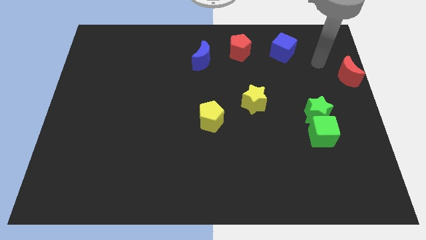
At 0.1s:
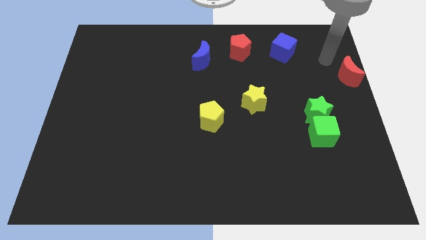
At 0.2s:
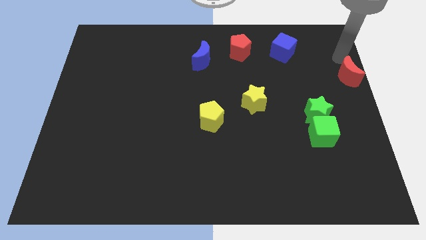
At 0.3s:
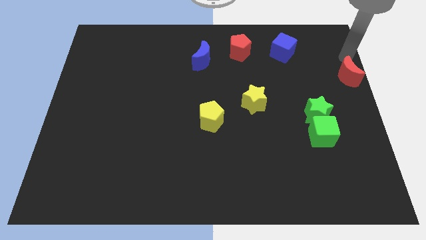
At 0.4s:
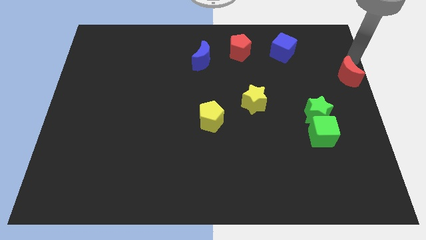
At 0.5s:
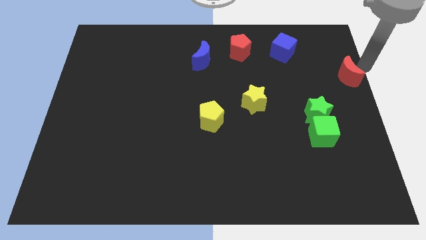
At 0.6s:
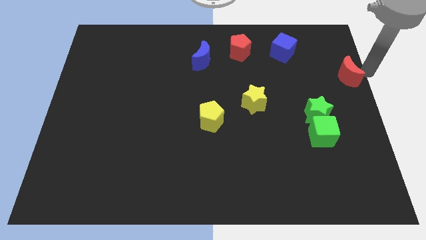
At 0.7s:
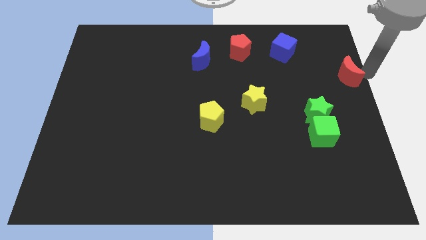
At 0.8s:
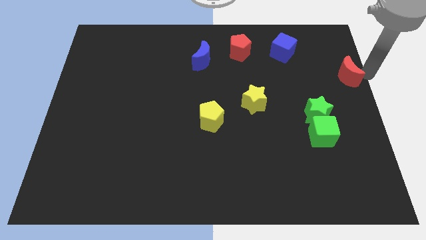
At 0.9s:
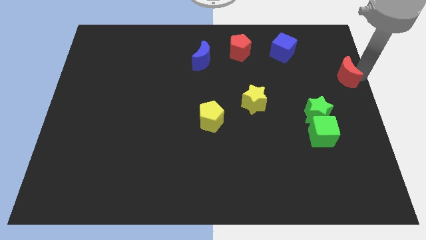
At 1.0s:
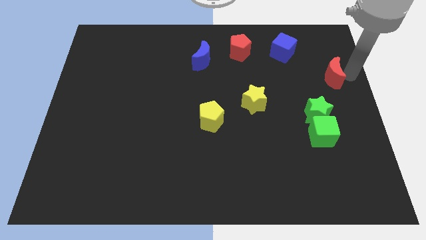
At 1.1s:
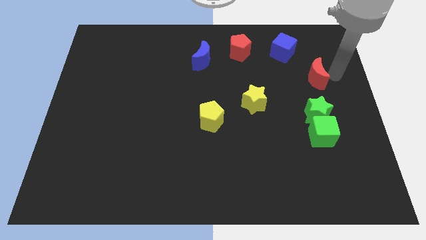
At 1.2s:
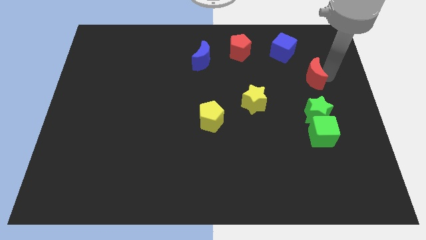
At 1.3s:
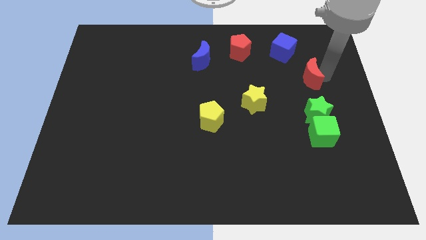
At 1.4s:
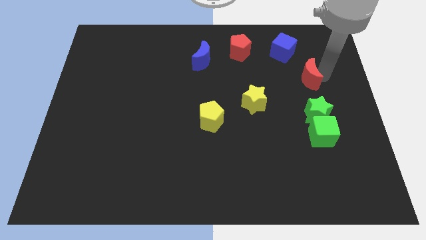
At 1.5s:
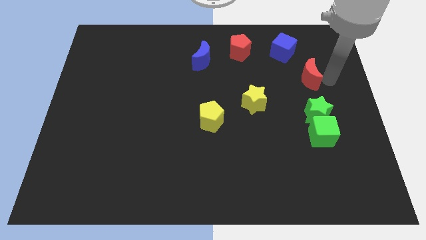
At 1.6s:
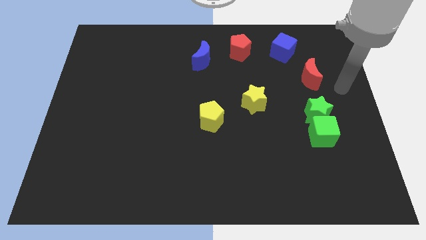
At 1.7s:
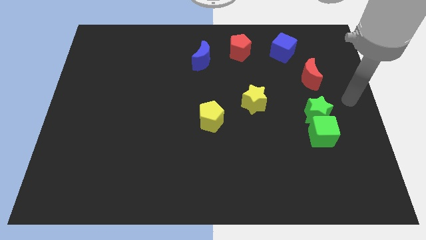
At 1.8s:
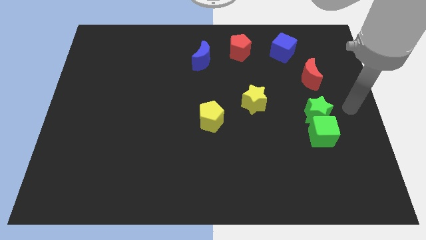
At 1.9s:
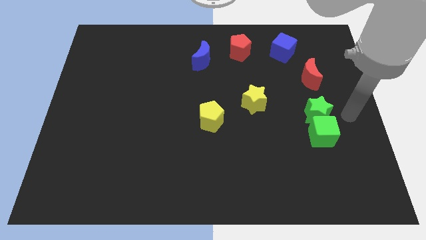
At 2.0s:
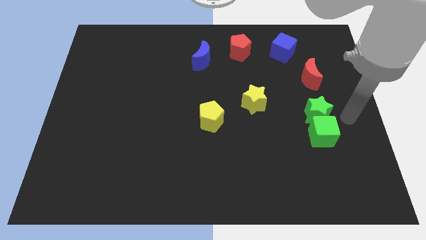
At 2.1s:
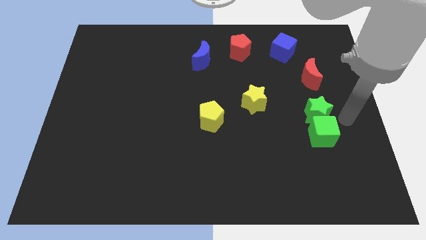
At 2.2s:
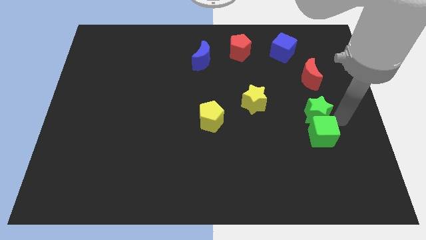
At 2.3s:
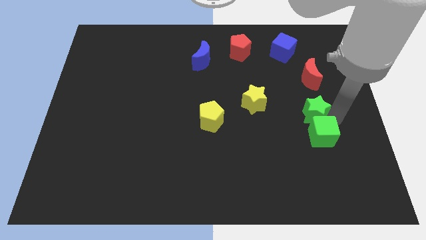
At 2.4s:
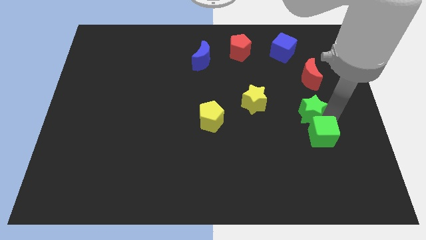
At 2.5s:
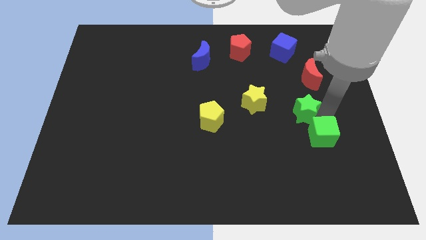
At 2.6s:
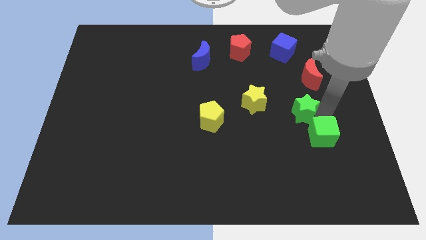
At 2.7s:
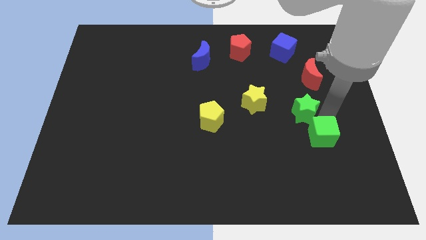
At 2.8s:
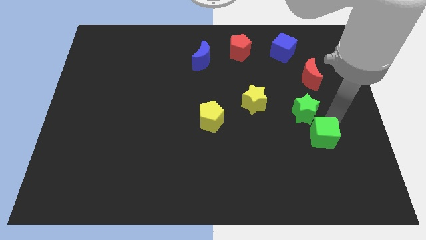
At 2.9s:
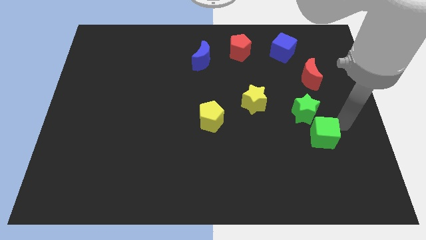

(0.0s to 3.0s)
push the red moon towards the top of the green star

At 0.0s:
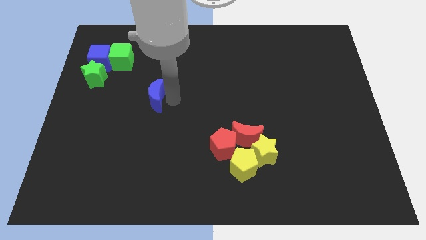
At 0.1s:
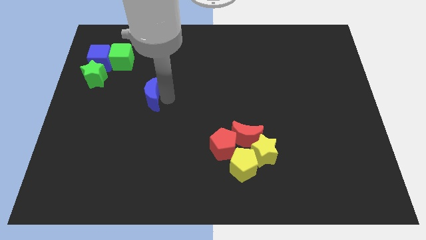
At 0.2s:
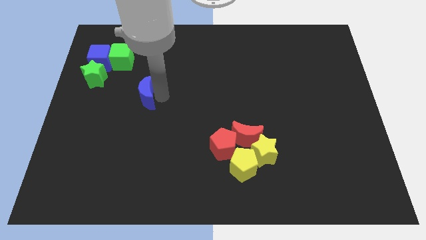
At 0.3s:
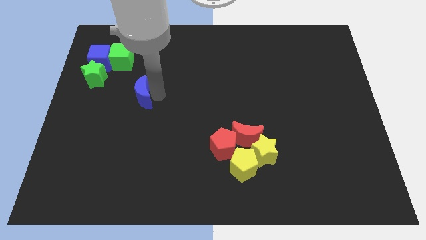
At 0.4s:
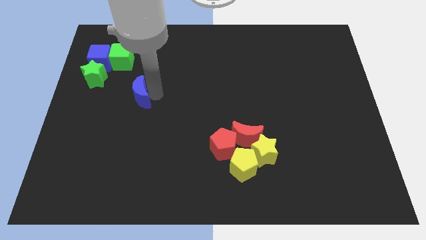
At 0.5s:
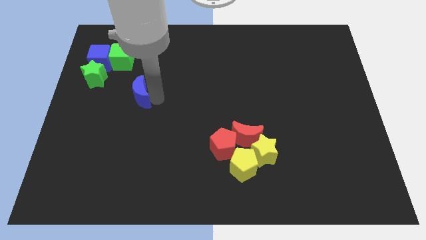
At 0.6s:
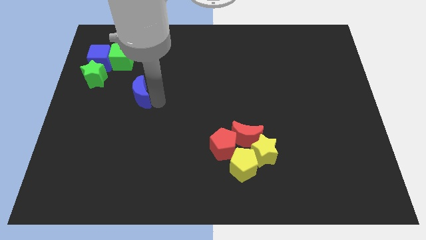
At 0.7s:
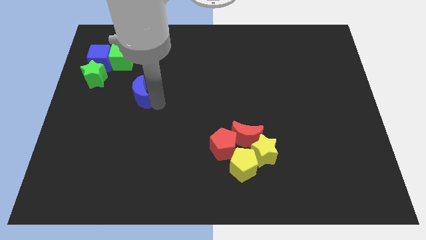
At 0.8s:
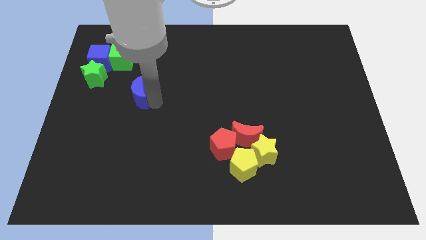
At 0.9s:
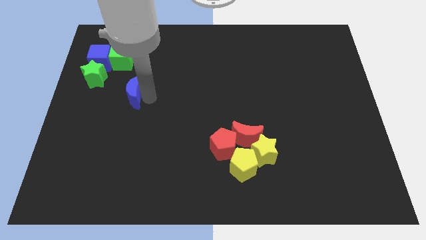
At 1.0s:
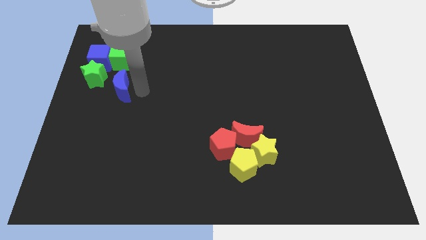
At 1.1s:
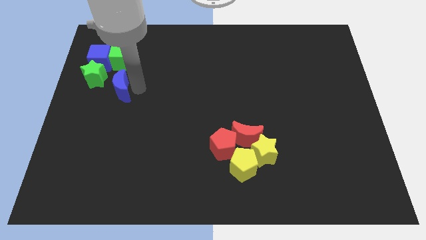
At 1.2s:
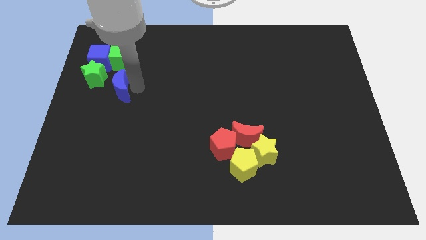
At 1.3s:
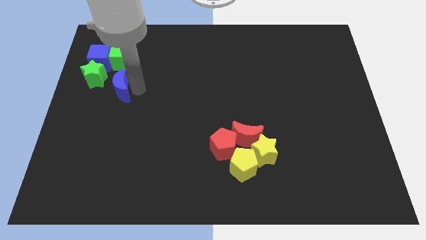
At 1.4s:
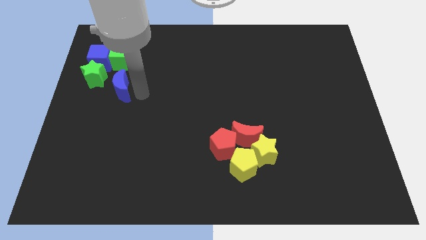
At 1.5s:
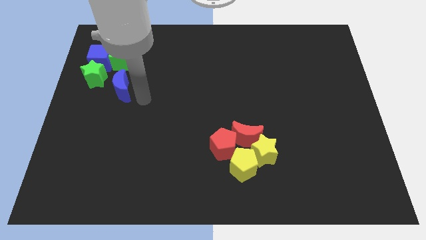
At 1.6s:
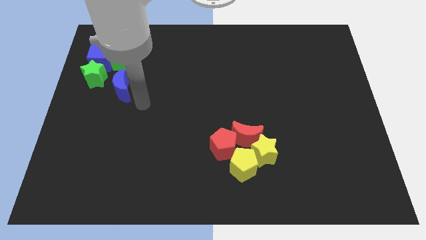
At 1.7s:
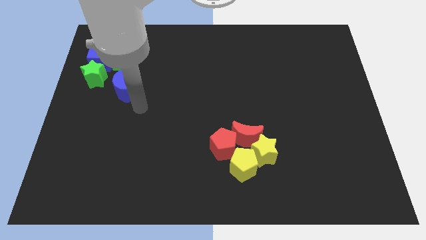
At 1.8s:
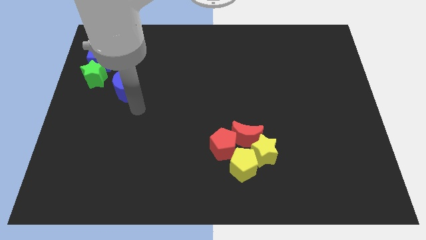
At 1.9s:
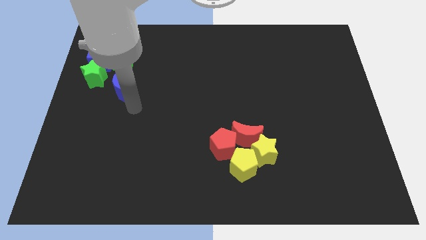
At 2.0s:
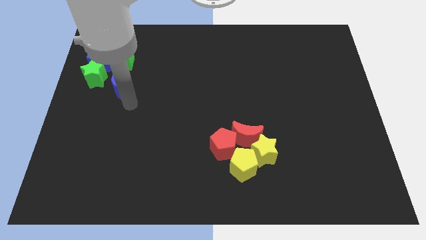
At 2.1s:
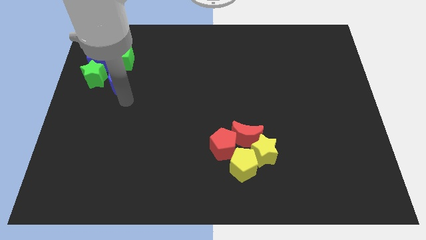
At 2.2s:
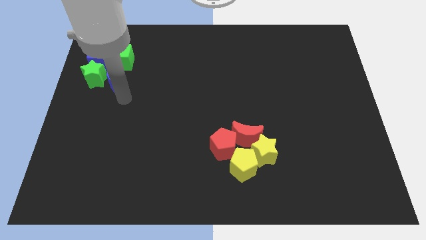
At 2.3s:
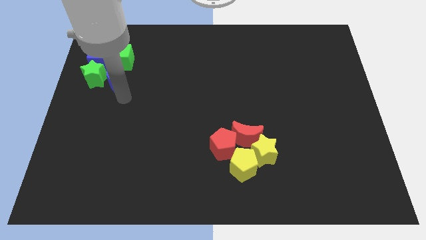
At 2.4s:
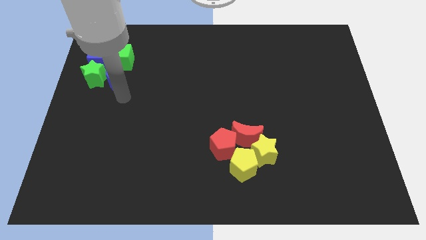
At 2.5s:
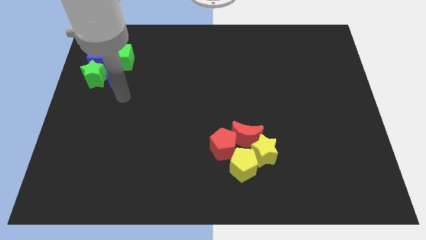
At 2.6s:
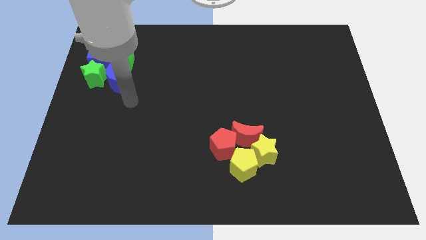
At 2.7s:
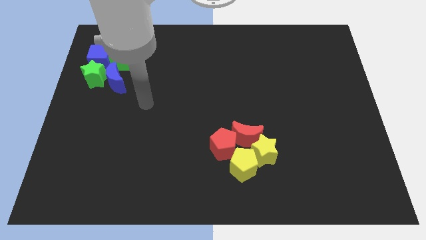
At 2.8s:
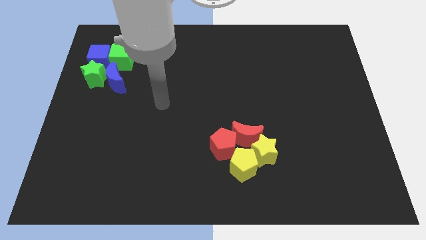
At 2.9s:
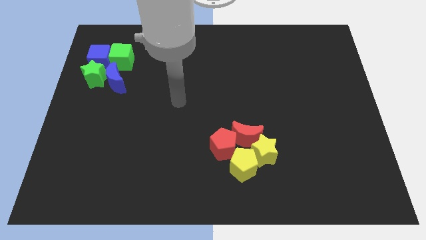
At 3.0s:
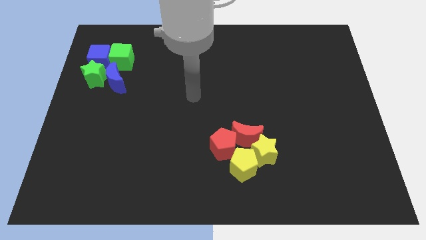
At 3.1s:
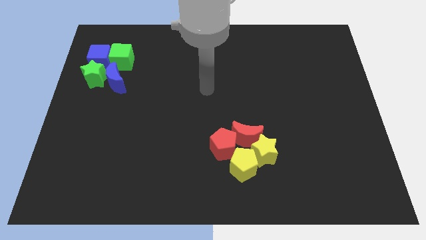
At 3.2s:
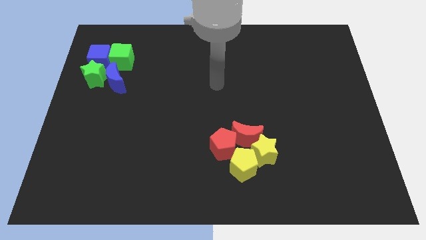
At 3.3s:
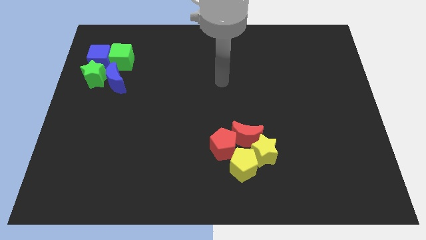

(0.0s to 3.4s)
place the blue crescent at the bottom of the green cube

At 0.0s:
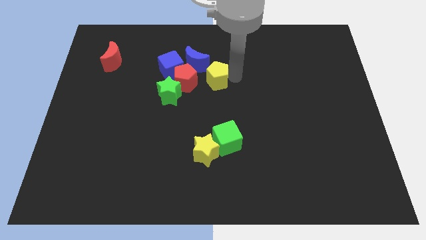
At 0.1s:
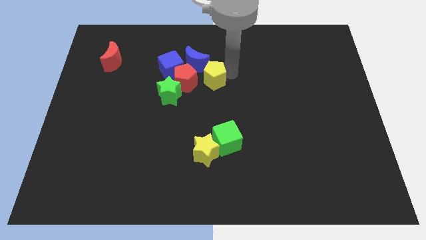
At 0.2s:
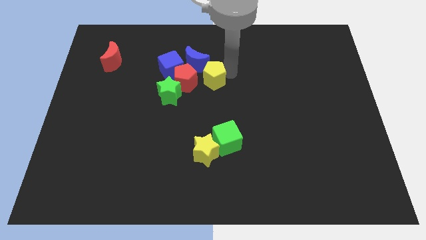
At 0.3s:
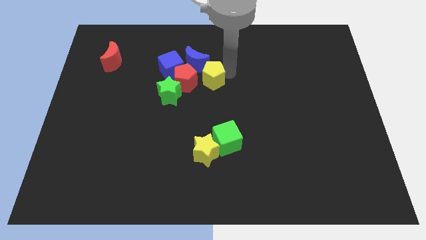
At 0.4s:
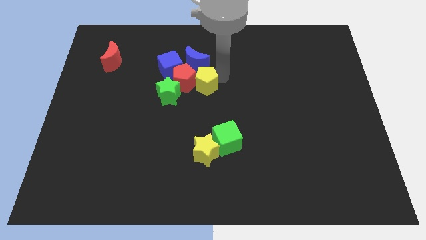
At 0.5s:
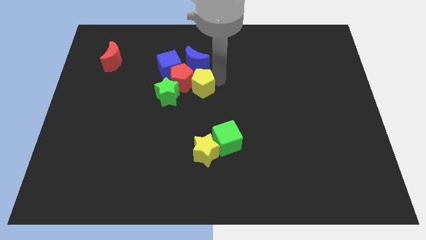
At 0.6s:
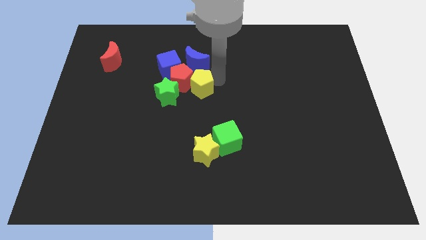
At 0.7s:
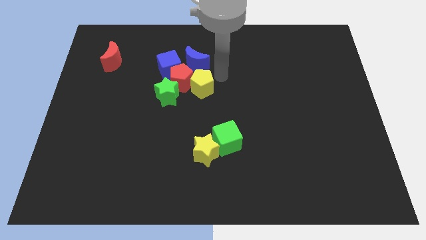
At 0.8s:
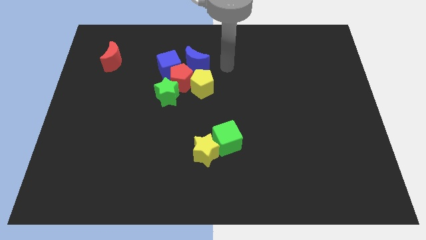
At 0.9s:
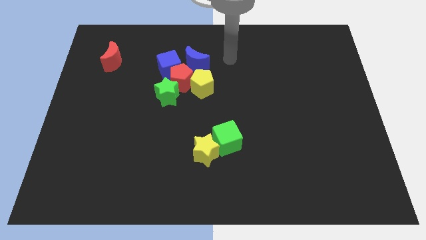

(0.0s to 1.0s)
slightly move the yellow pentagon into red pentagon

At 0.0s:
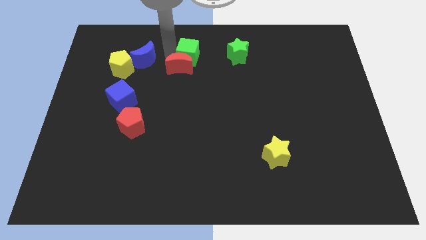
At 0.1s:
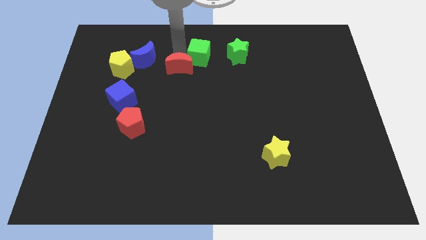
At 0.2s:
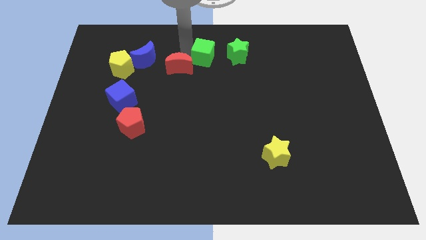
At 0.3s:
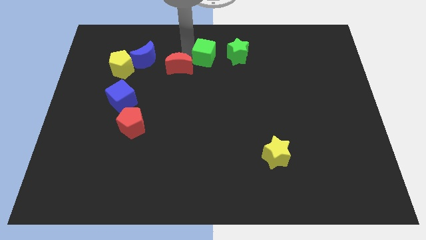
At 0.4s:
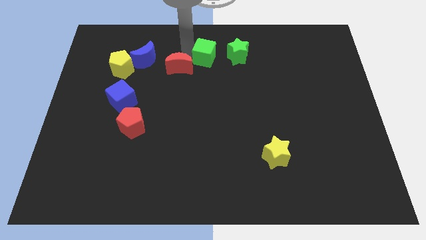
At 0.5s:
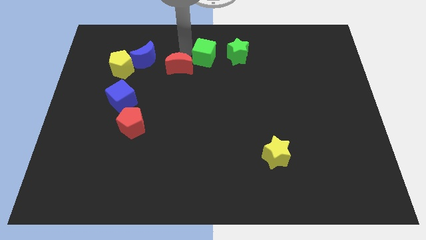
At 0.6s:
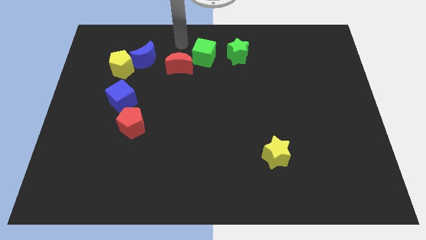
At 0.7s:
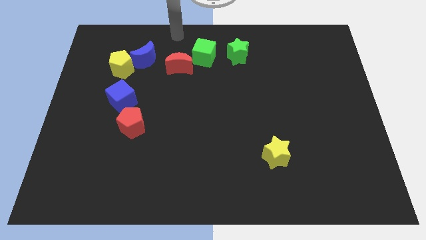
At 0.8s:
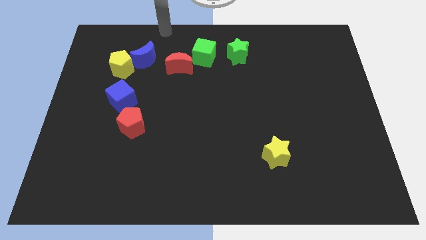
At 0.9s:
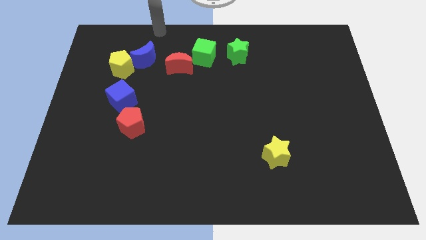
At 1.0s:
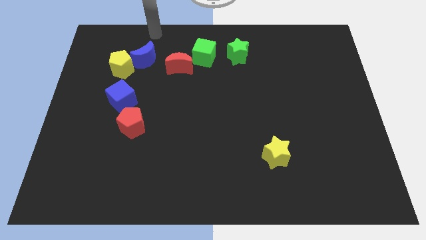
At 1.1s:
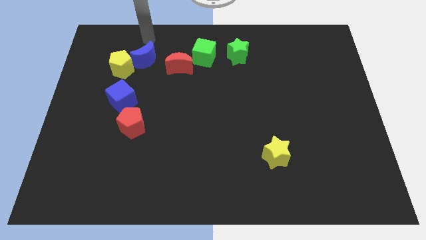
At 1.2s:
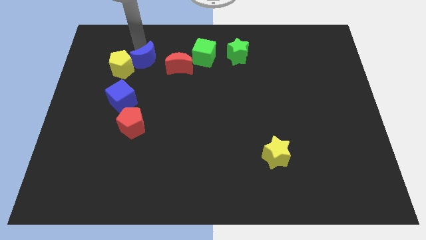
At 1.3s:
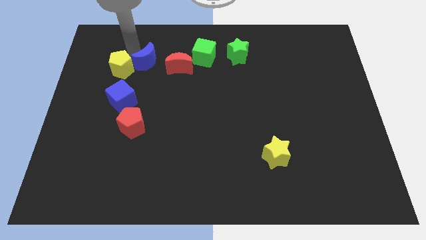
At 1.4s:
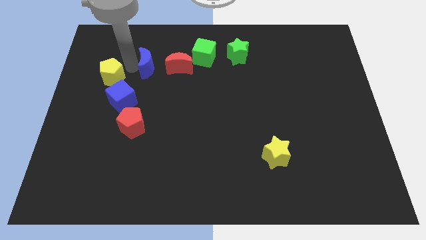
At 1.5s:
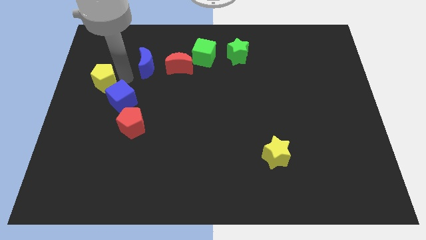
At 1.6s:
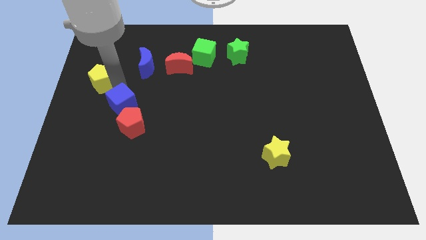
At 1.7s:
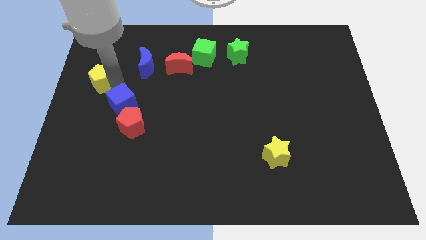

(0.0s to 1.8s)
drag the green cube to the right
